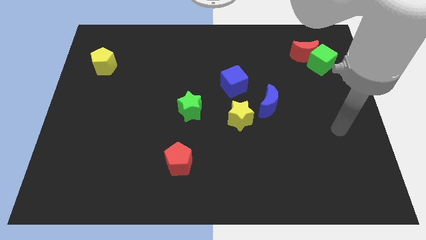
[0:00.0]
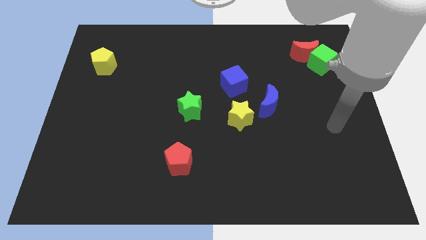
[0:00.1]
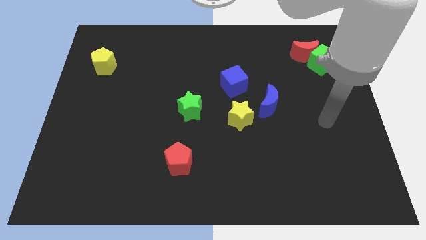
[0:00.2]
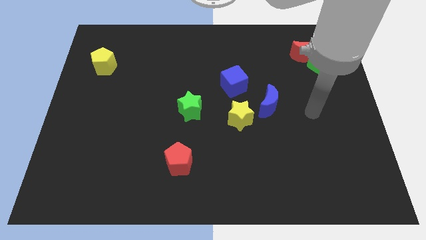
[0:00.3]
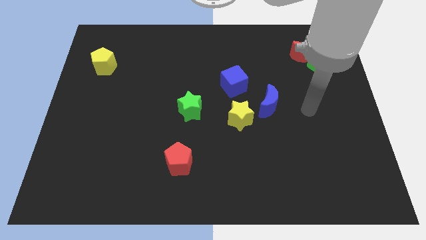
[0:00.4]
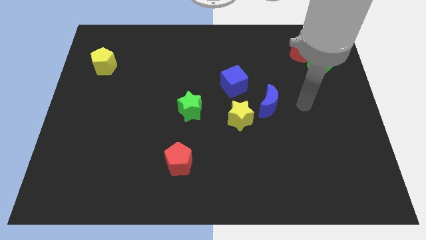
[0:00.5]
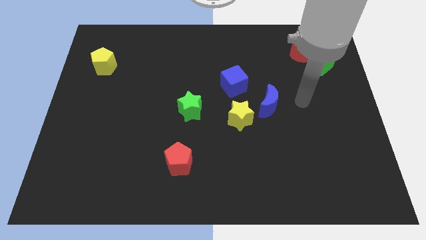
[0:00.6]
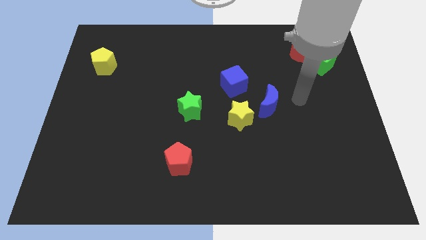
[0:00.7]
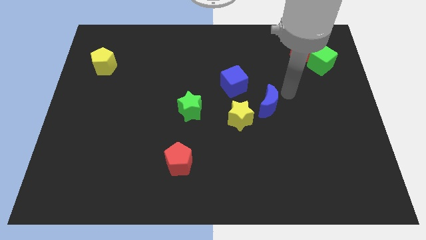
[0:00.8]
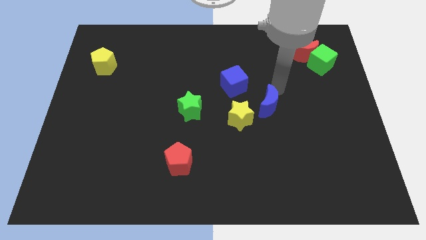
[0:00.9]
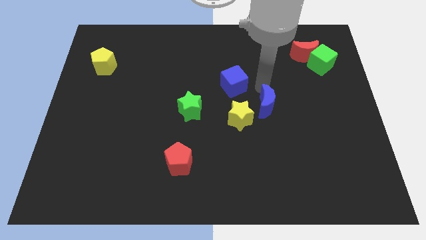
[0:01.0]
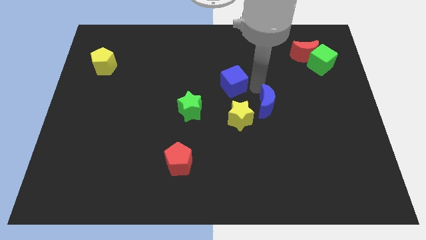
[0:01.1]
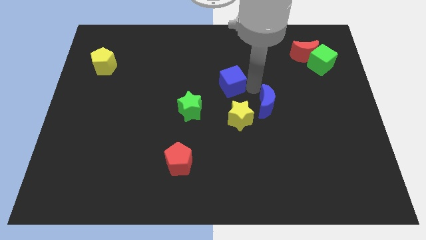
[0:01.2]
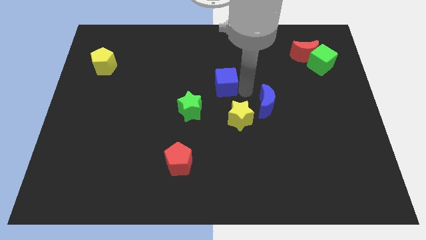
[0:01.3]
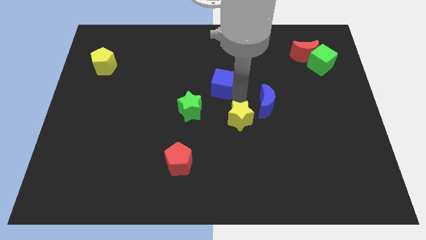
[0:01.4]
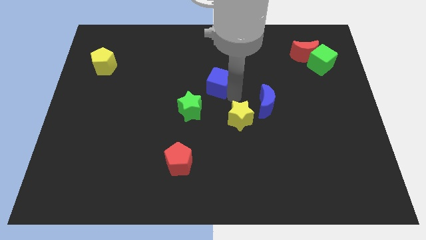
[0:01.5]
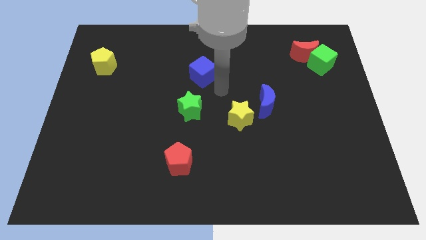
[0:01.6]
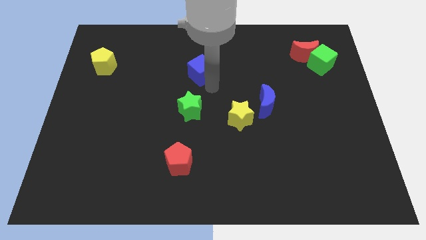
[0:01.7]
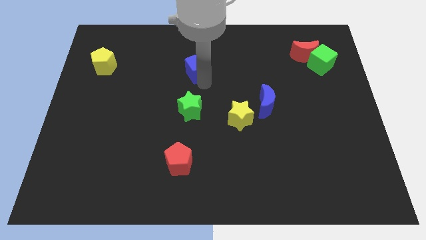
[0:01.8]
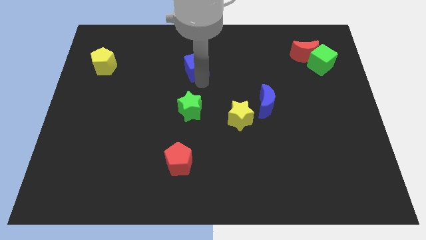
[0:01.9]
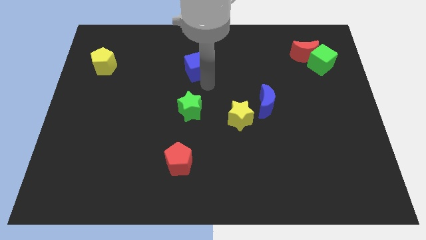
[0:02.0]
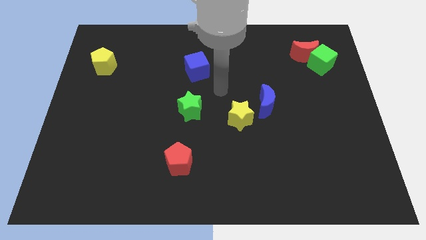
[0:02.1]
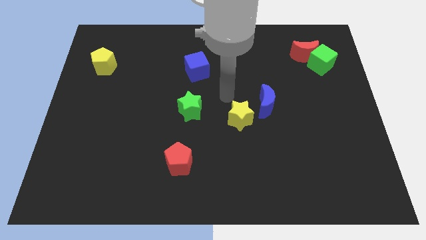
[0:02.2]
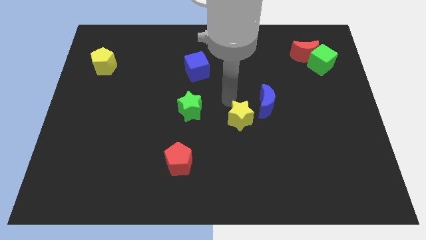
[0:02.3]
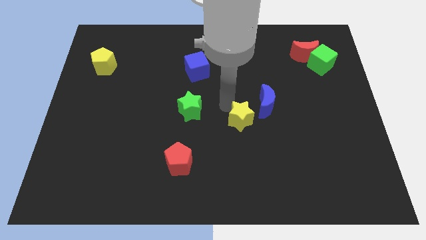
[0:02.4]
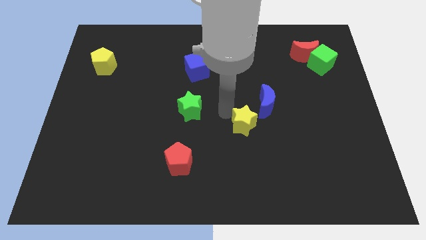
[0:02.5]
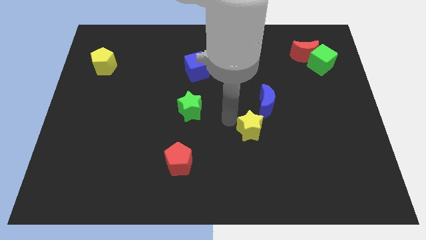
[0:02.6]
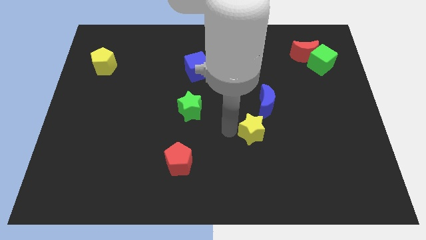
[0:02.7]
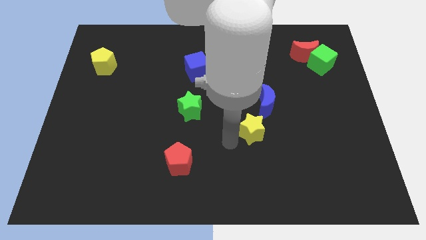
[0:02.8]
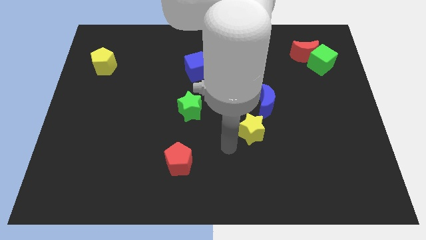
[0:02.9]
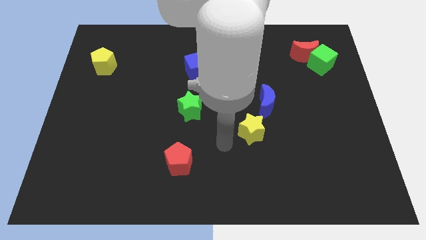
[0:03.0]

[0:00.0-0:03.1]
move the blue cube above the green star

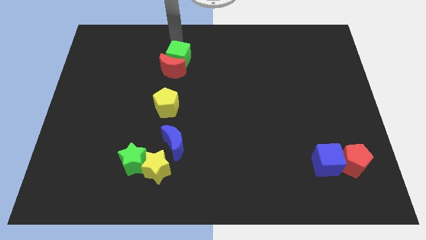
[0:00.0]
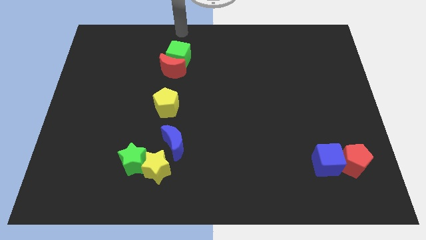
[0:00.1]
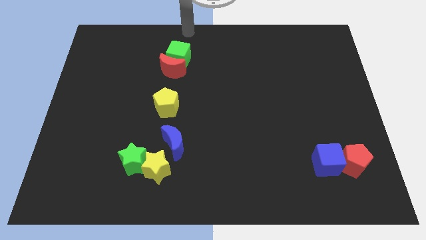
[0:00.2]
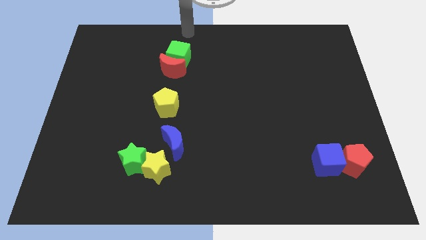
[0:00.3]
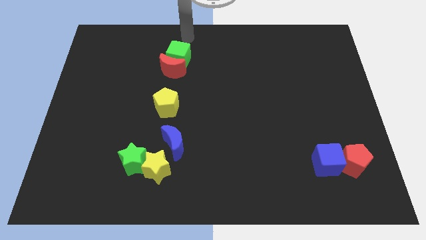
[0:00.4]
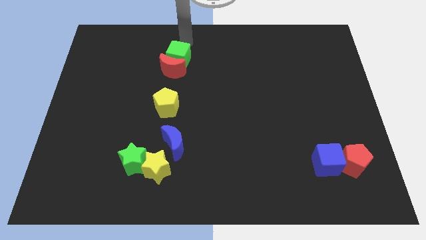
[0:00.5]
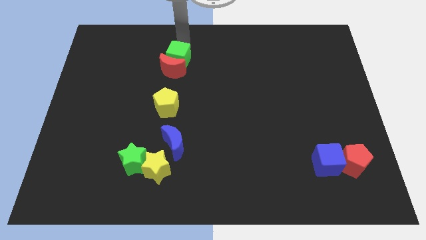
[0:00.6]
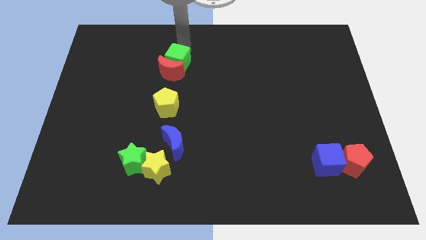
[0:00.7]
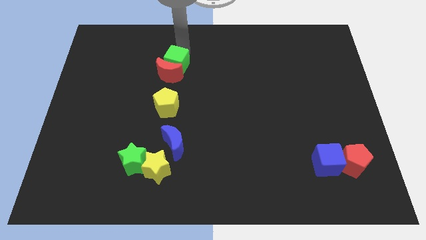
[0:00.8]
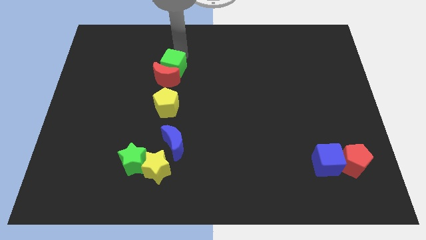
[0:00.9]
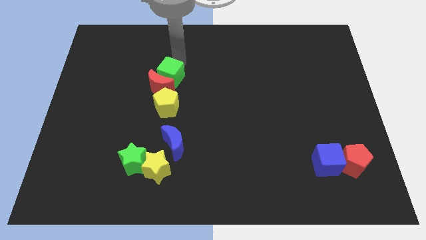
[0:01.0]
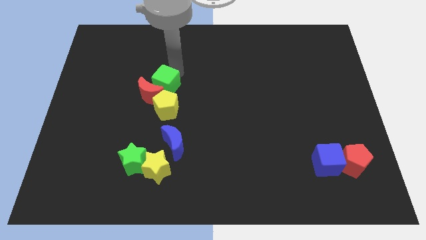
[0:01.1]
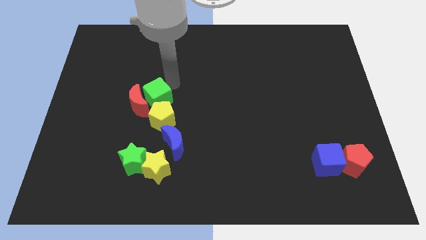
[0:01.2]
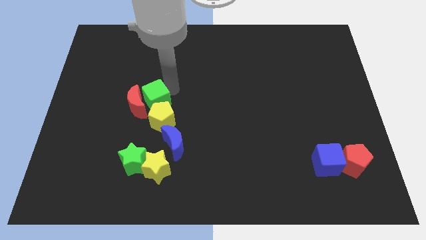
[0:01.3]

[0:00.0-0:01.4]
push the green cube along with the red crescent into the yellow pentagon

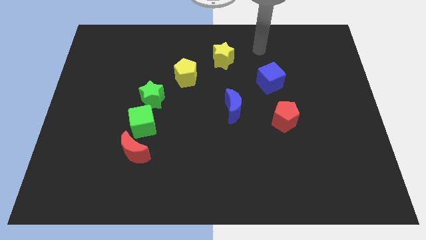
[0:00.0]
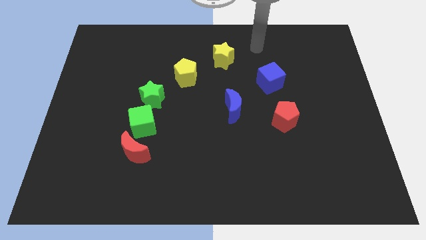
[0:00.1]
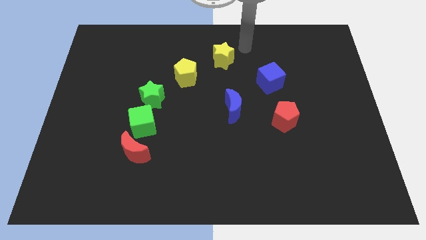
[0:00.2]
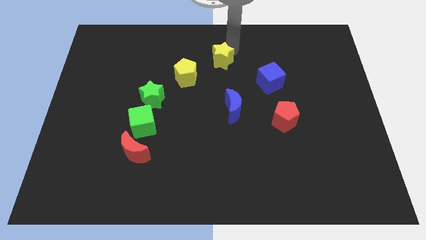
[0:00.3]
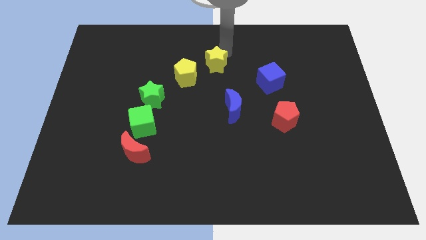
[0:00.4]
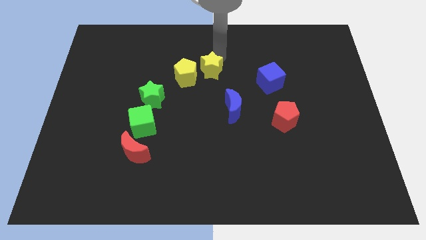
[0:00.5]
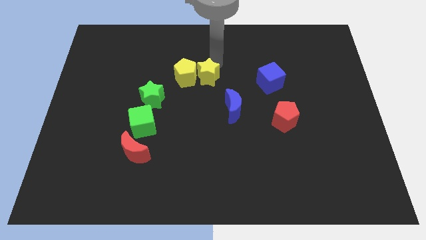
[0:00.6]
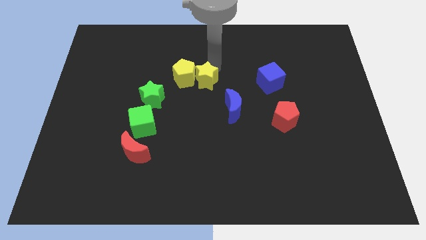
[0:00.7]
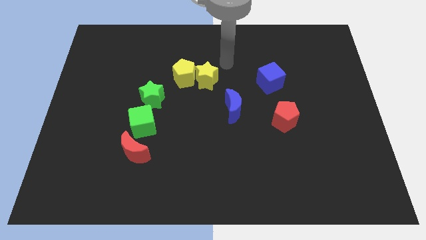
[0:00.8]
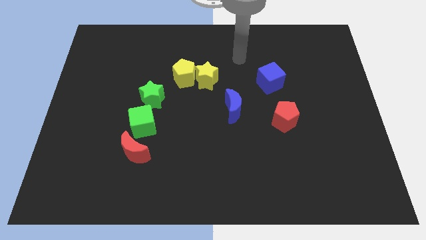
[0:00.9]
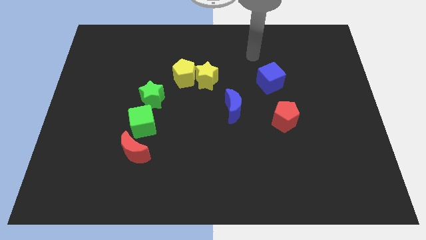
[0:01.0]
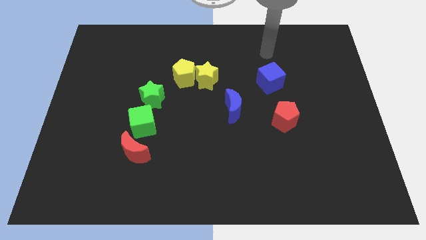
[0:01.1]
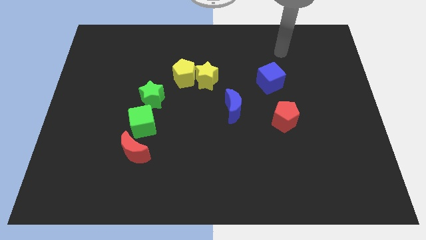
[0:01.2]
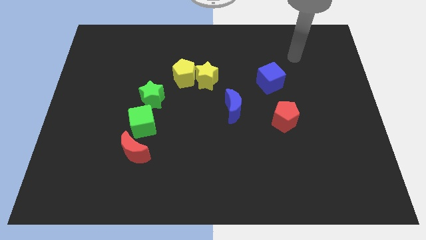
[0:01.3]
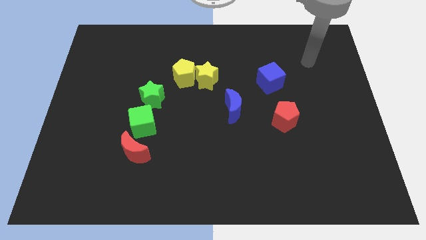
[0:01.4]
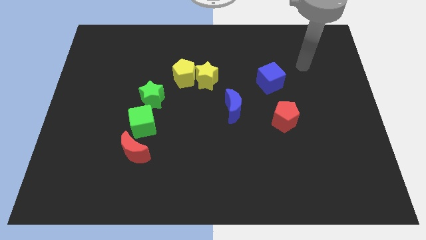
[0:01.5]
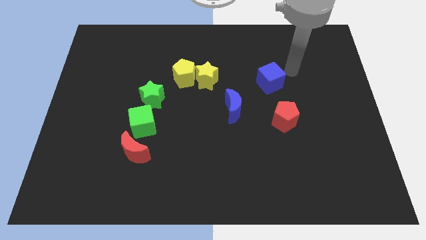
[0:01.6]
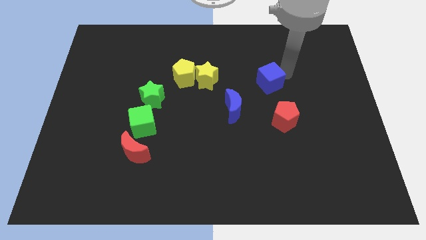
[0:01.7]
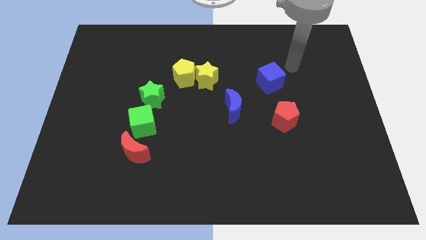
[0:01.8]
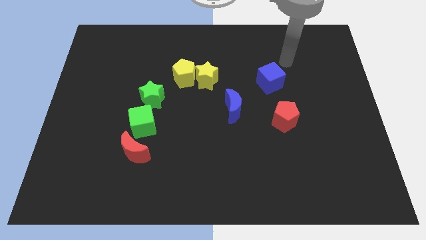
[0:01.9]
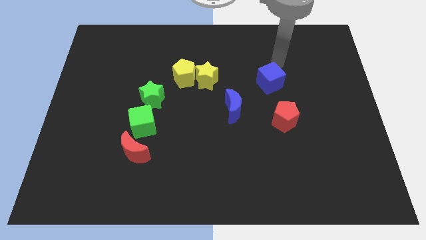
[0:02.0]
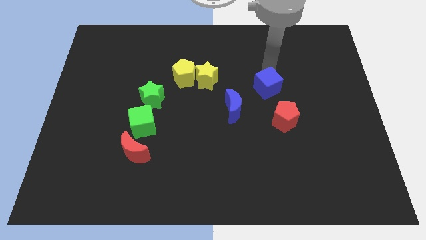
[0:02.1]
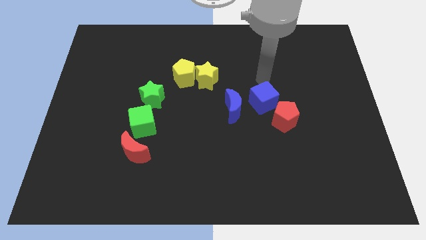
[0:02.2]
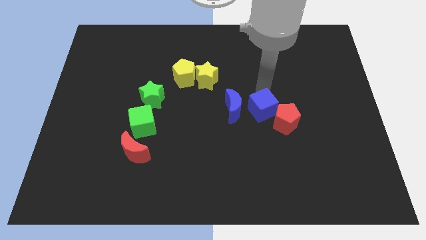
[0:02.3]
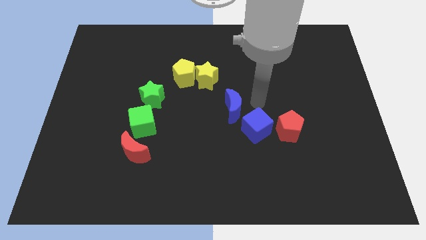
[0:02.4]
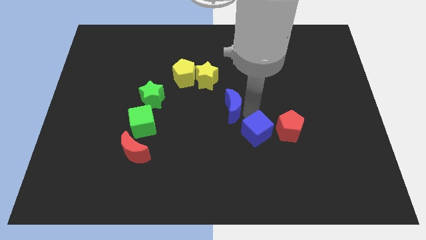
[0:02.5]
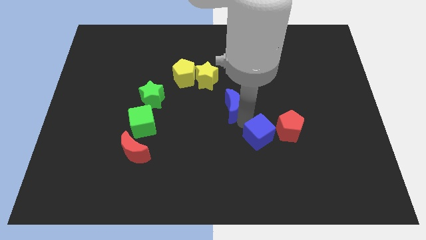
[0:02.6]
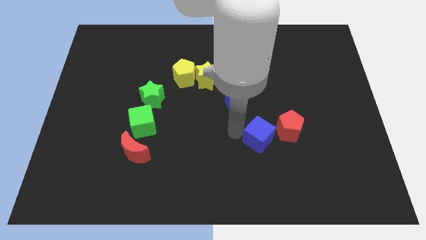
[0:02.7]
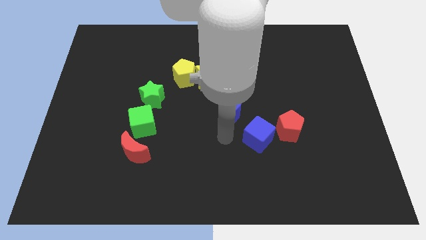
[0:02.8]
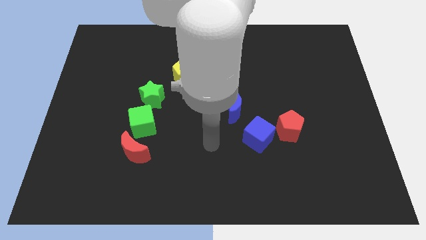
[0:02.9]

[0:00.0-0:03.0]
move blue cube left beside the red pentagon

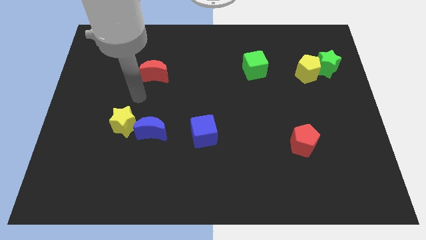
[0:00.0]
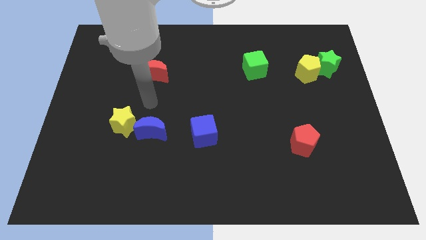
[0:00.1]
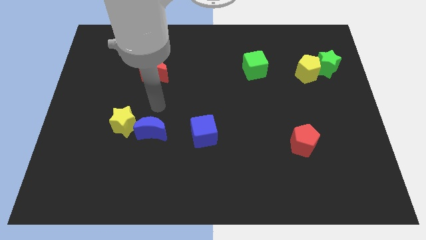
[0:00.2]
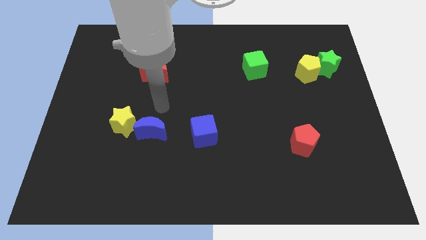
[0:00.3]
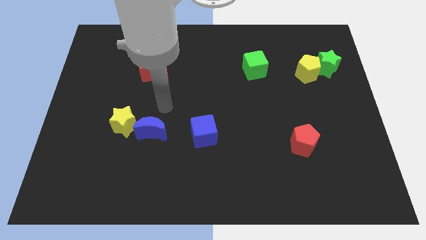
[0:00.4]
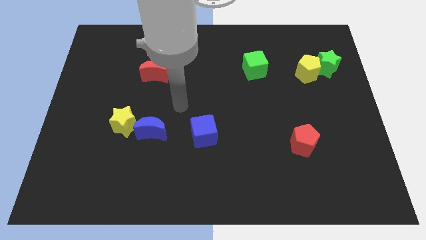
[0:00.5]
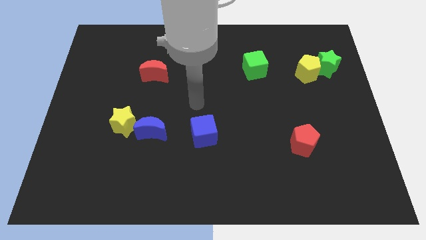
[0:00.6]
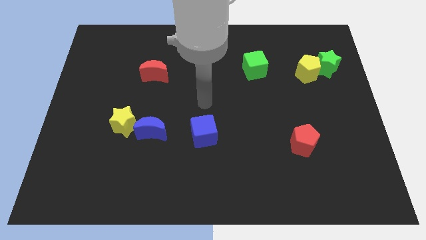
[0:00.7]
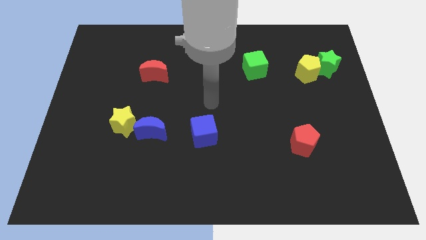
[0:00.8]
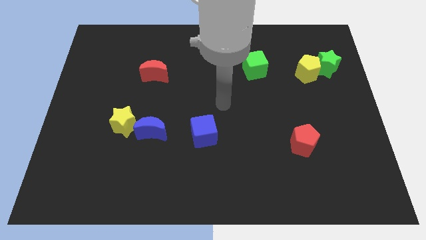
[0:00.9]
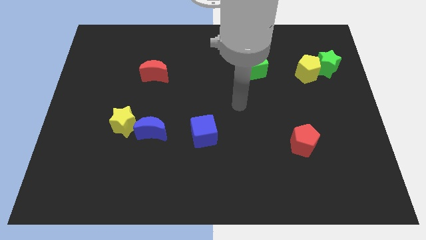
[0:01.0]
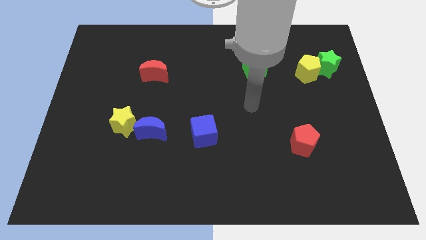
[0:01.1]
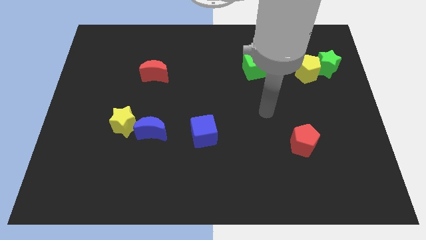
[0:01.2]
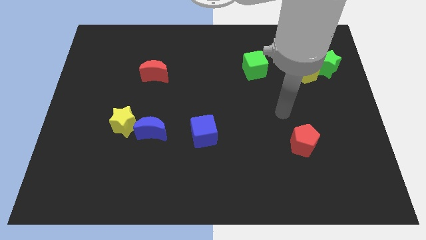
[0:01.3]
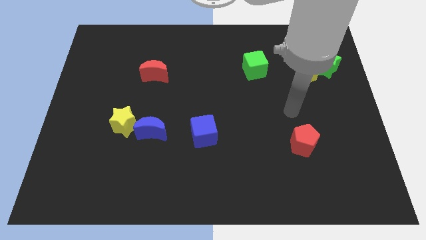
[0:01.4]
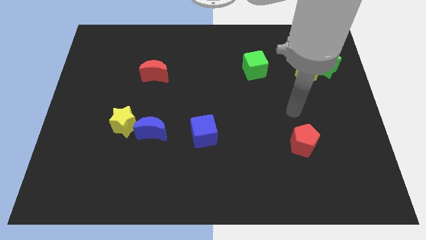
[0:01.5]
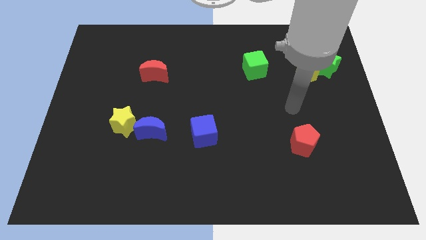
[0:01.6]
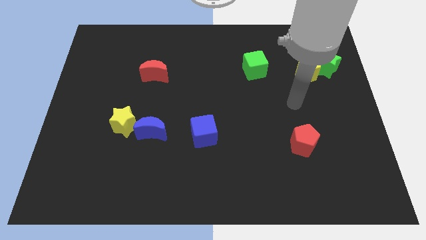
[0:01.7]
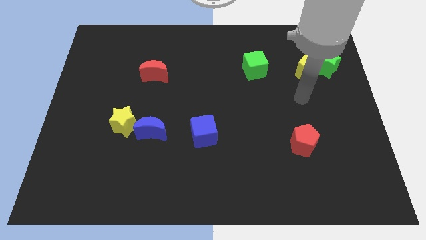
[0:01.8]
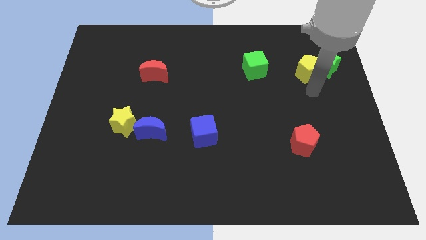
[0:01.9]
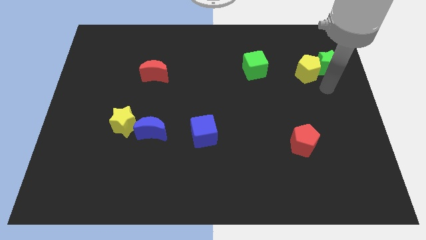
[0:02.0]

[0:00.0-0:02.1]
move your arm towards the green star
